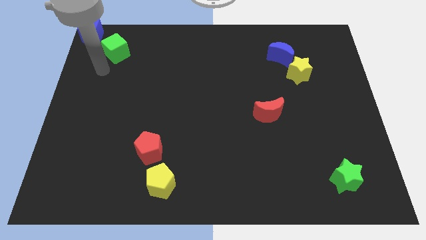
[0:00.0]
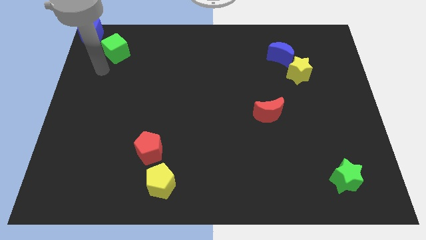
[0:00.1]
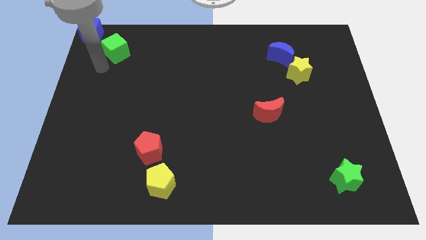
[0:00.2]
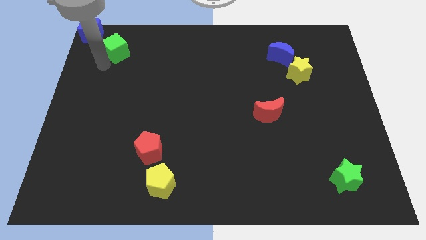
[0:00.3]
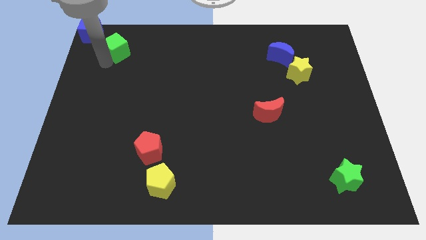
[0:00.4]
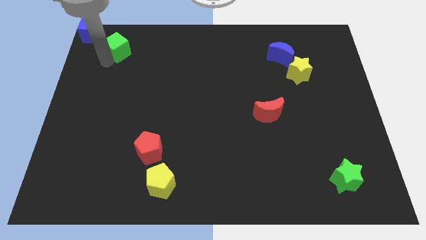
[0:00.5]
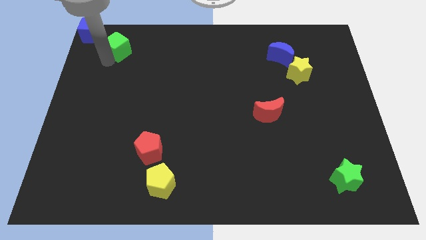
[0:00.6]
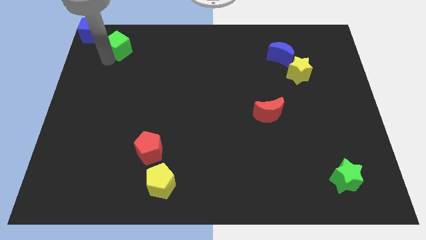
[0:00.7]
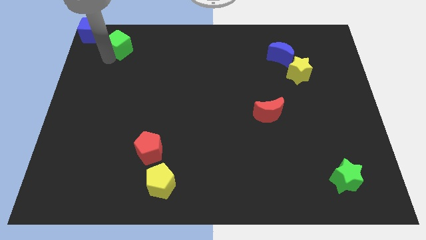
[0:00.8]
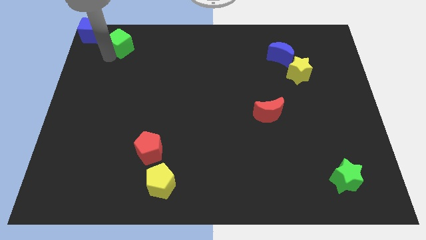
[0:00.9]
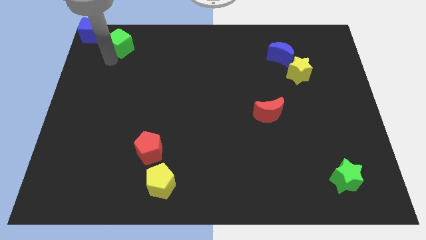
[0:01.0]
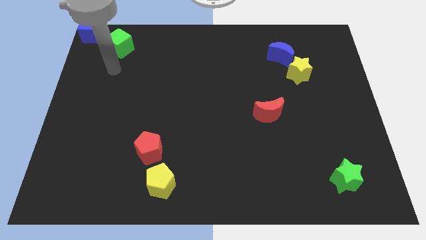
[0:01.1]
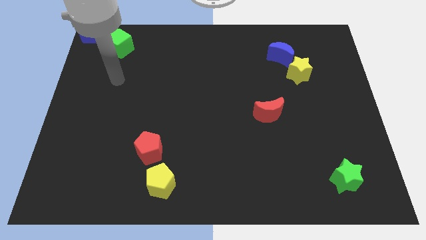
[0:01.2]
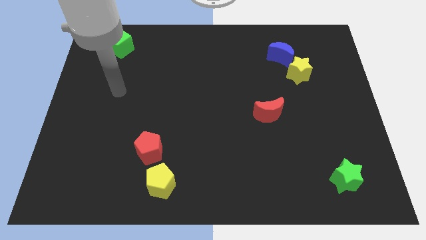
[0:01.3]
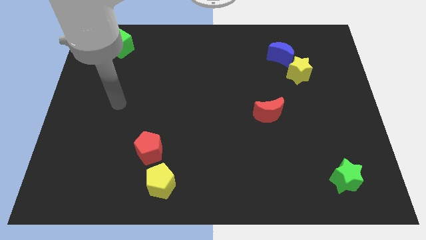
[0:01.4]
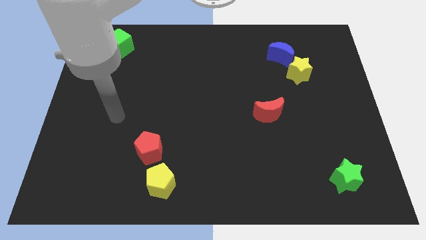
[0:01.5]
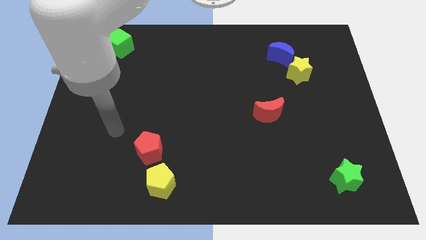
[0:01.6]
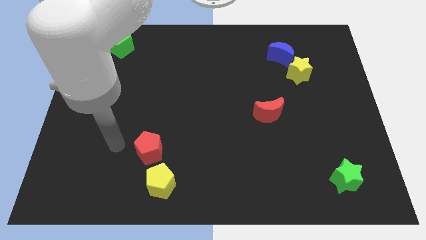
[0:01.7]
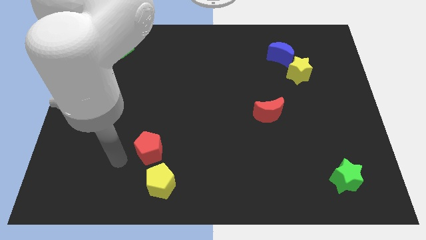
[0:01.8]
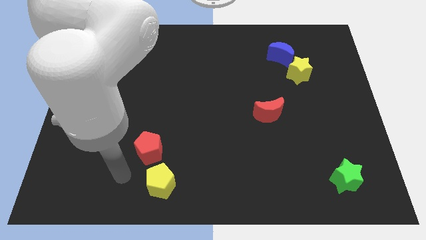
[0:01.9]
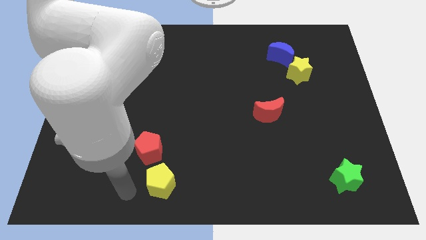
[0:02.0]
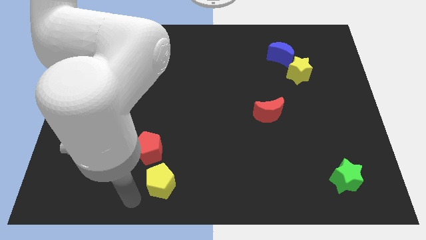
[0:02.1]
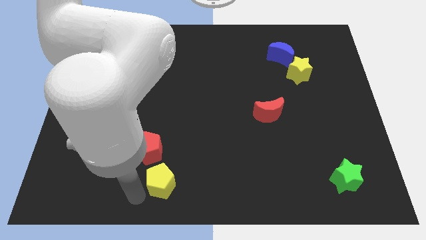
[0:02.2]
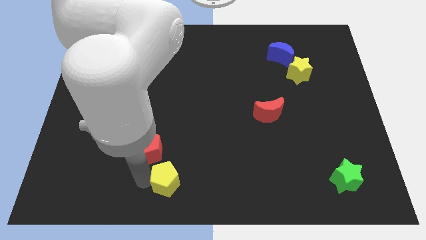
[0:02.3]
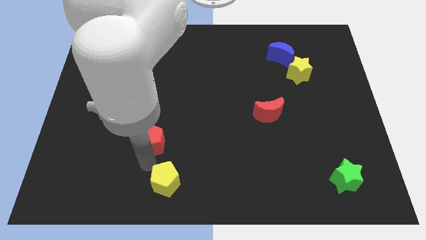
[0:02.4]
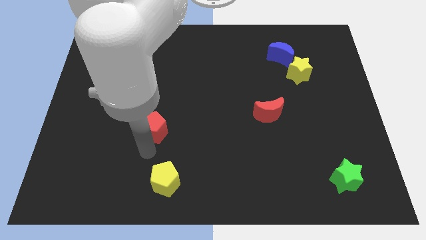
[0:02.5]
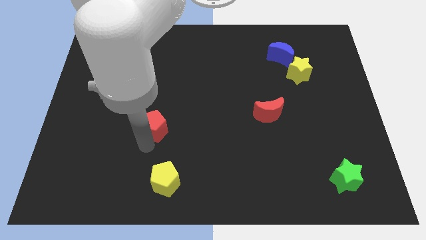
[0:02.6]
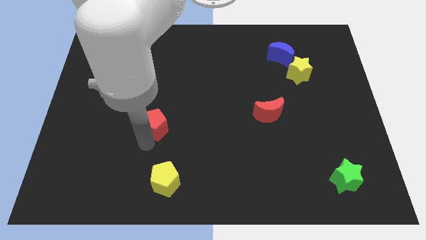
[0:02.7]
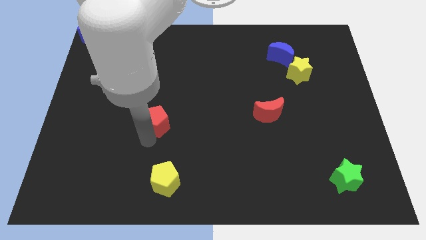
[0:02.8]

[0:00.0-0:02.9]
separate the red pentagon and the yellow pentagon

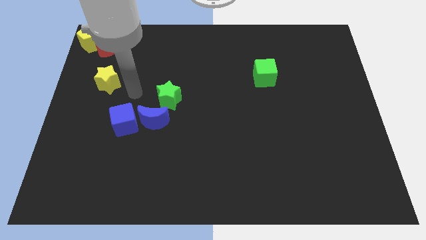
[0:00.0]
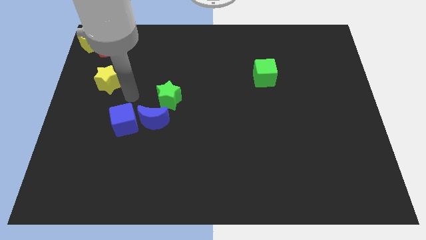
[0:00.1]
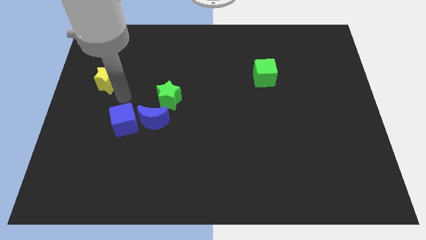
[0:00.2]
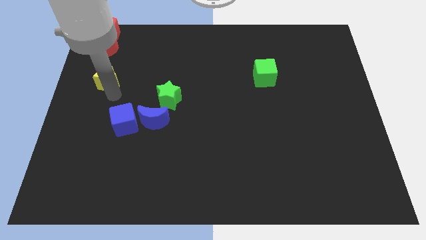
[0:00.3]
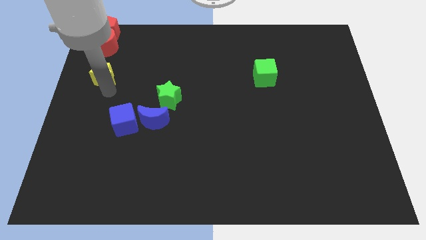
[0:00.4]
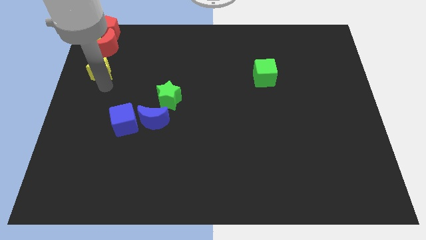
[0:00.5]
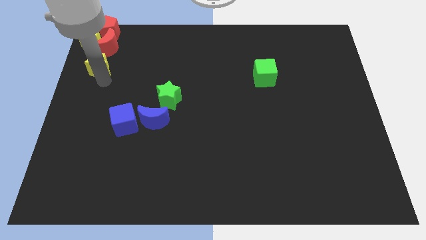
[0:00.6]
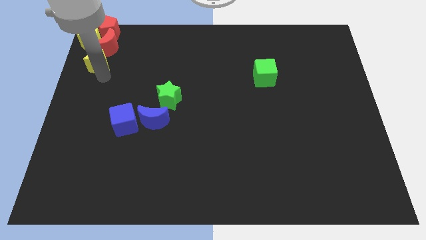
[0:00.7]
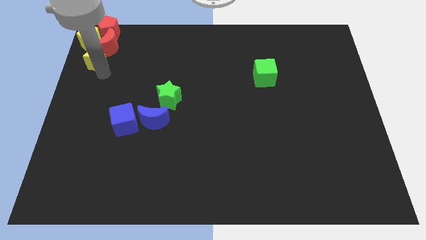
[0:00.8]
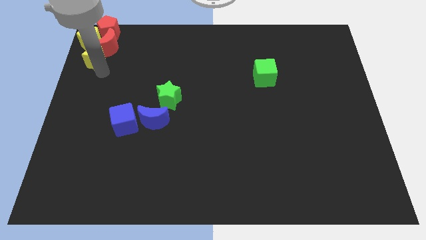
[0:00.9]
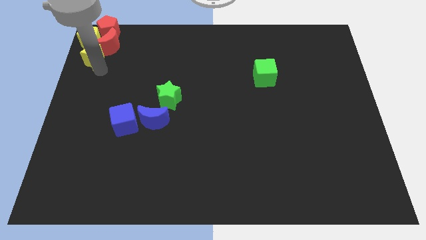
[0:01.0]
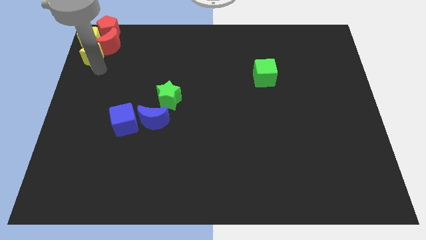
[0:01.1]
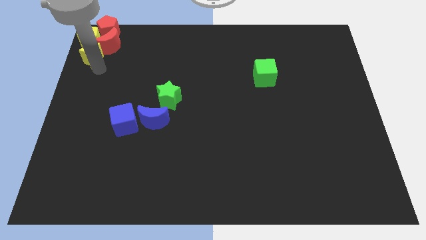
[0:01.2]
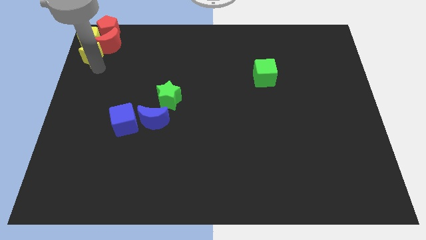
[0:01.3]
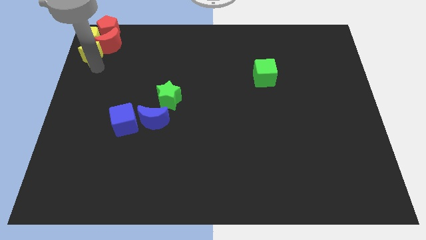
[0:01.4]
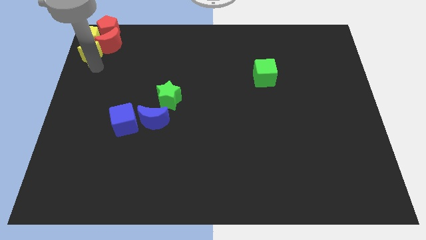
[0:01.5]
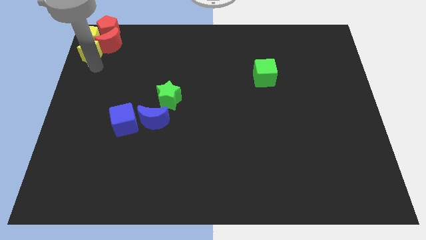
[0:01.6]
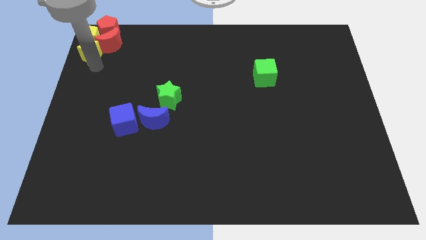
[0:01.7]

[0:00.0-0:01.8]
group up the yellow blocks at the top left corner of the board

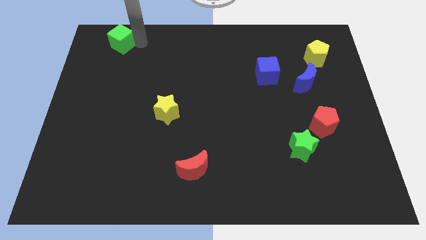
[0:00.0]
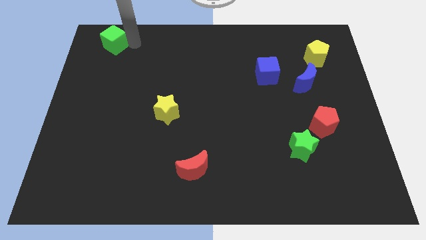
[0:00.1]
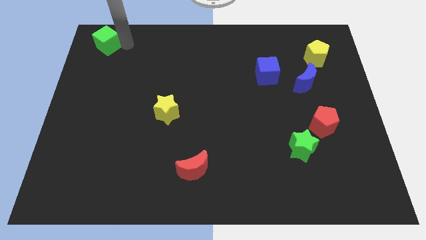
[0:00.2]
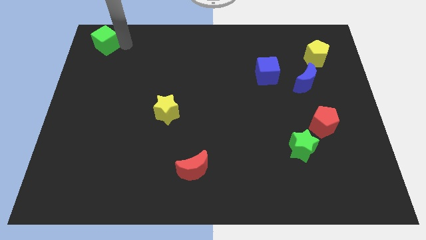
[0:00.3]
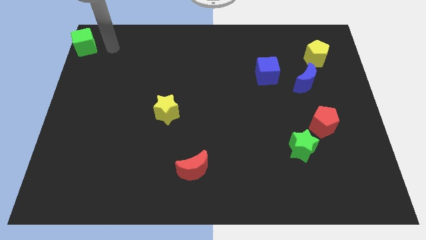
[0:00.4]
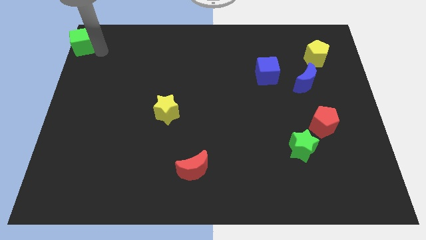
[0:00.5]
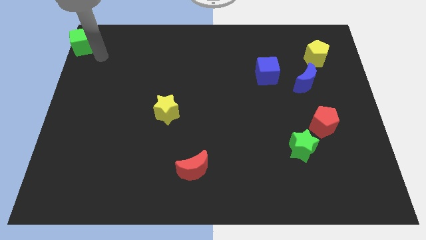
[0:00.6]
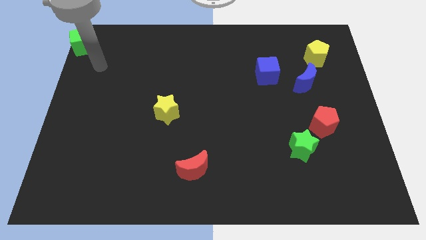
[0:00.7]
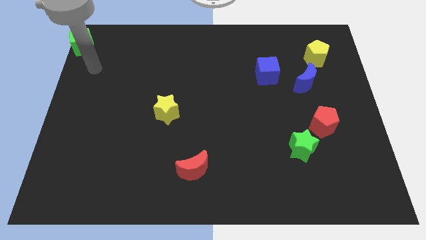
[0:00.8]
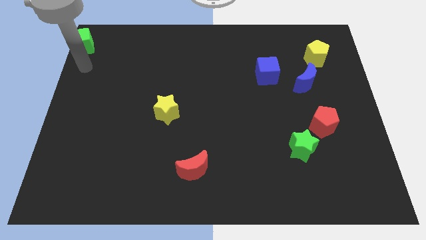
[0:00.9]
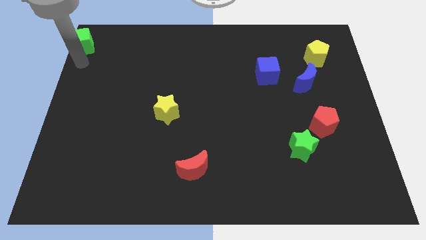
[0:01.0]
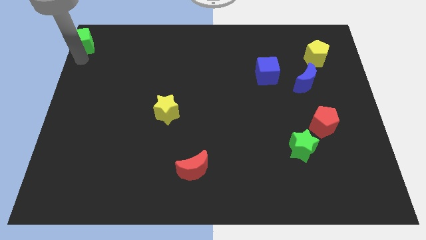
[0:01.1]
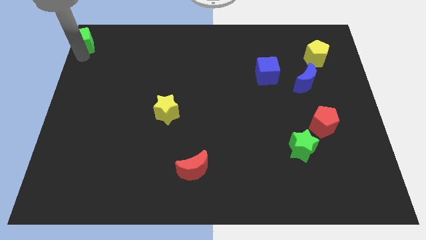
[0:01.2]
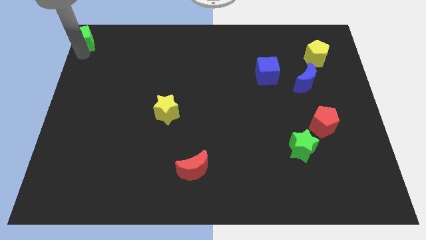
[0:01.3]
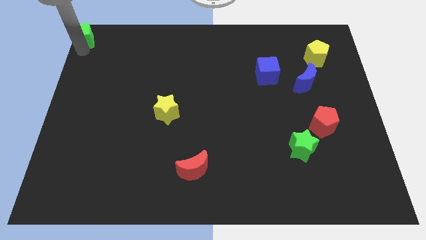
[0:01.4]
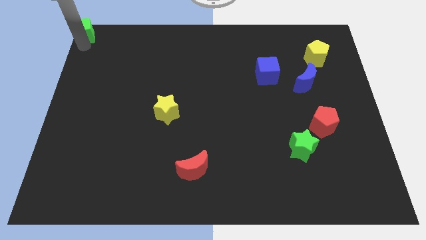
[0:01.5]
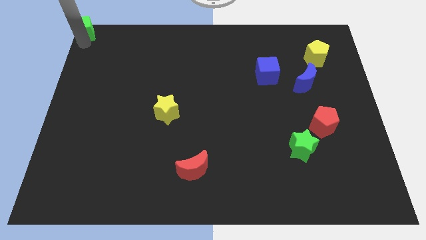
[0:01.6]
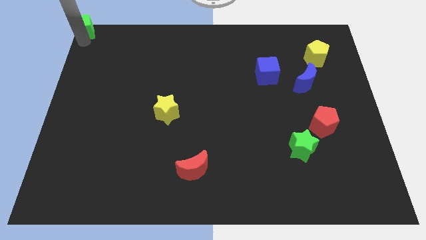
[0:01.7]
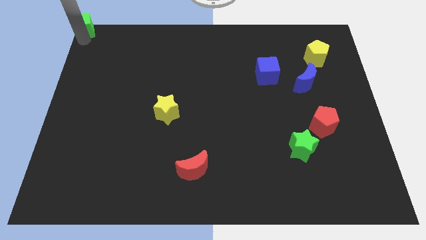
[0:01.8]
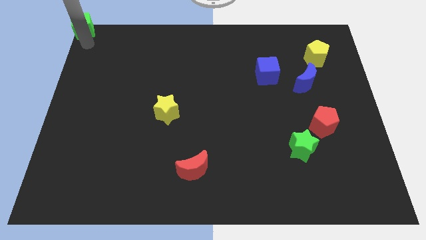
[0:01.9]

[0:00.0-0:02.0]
put the green cube at the top left corner

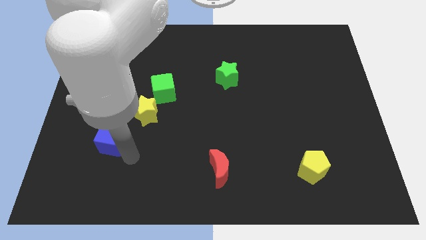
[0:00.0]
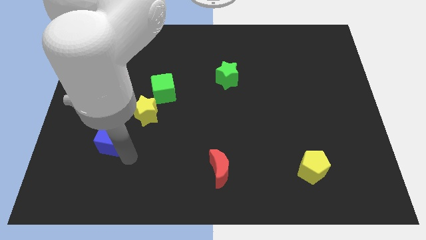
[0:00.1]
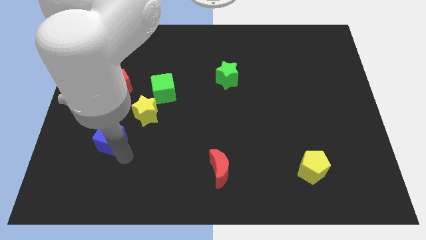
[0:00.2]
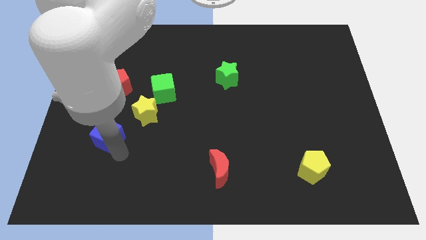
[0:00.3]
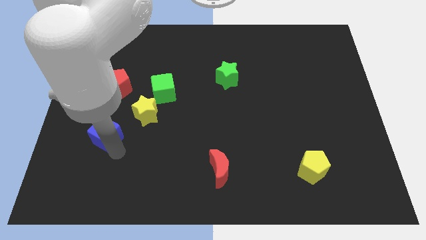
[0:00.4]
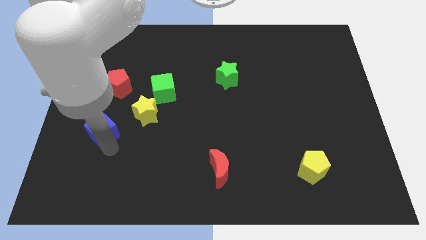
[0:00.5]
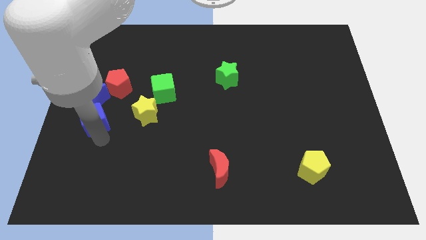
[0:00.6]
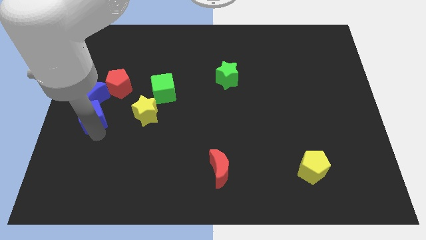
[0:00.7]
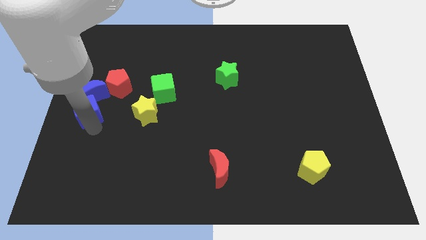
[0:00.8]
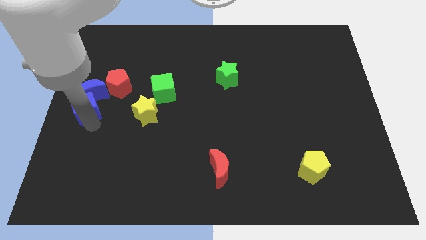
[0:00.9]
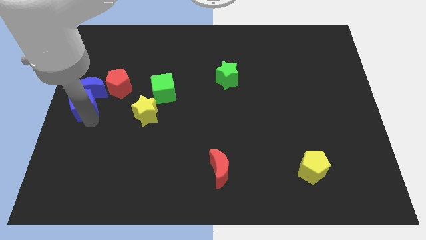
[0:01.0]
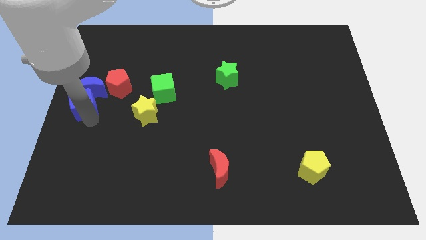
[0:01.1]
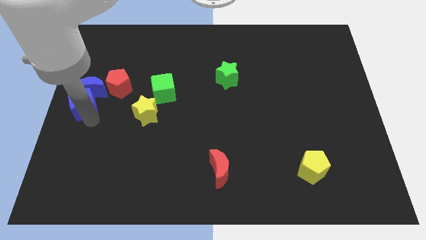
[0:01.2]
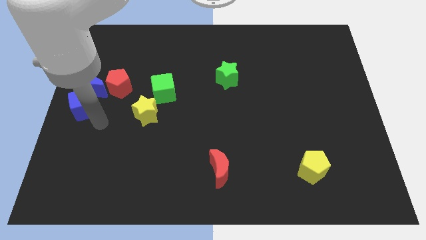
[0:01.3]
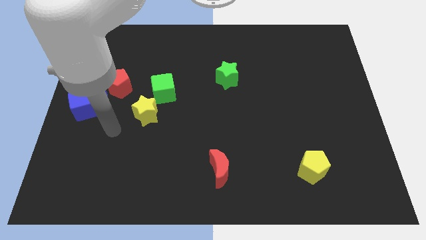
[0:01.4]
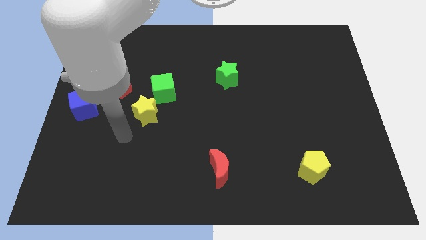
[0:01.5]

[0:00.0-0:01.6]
push blue cube towards blue moon

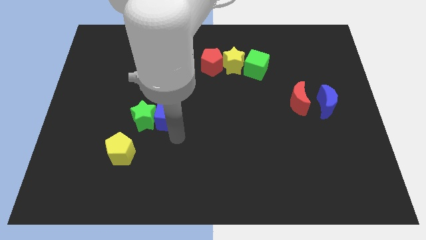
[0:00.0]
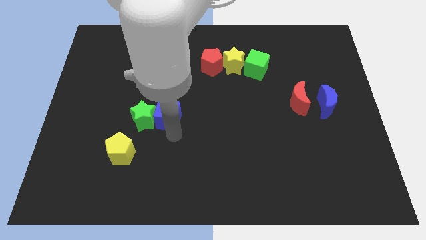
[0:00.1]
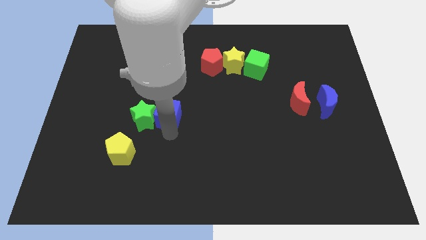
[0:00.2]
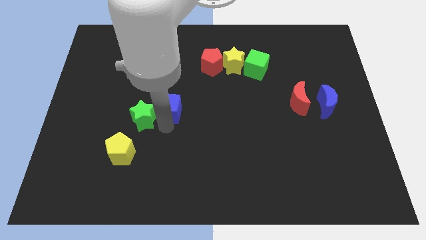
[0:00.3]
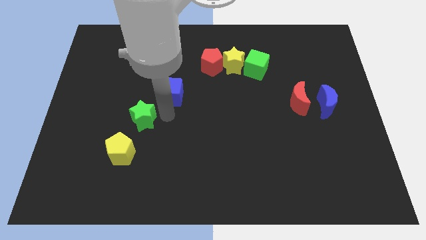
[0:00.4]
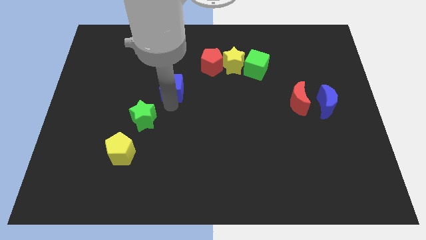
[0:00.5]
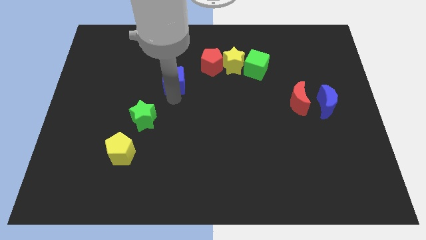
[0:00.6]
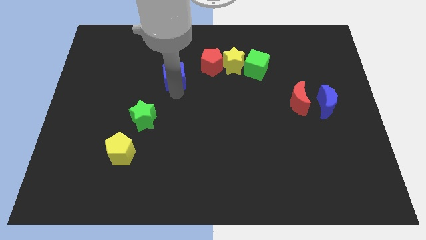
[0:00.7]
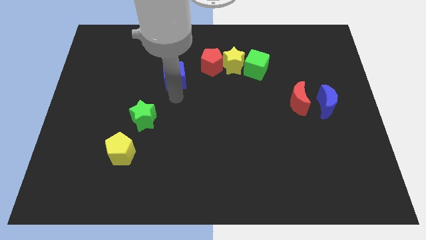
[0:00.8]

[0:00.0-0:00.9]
separate blue cube from the green star
